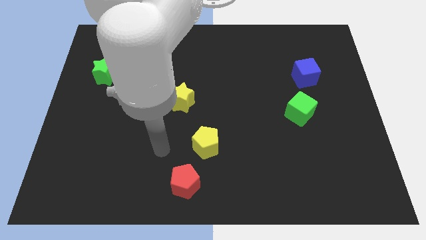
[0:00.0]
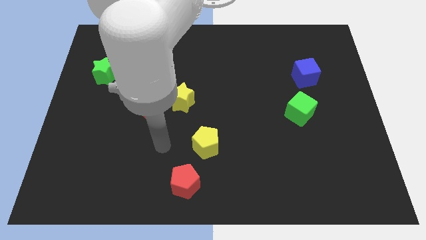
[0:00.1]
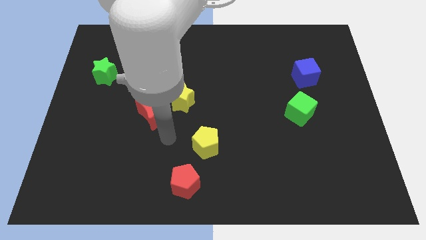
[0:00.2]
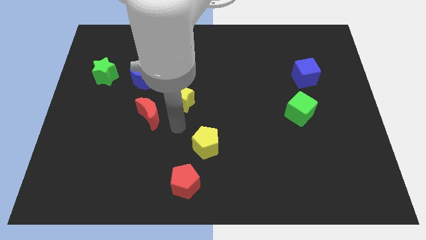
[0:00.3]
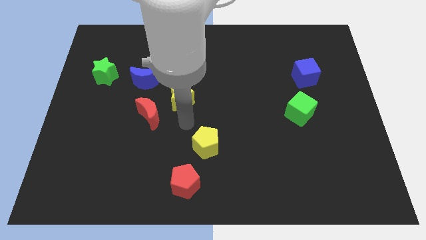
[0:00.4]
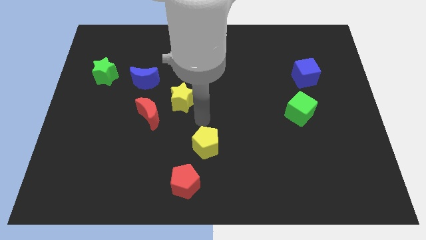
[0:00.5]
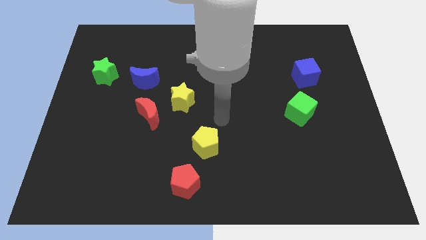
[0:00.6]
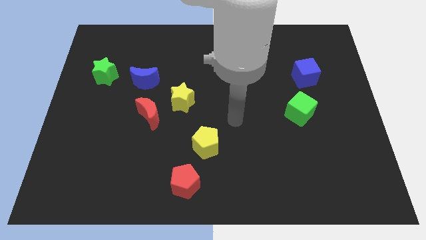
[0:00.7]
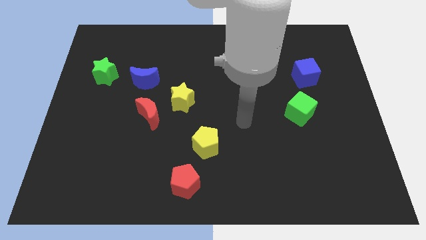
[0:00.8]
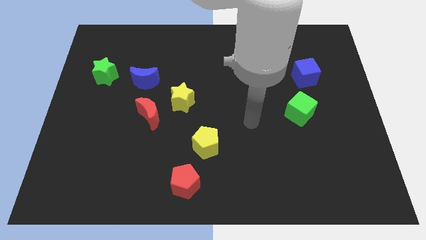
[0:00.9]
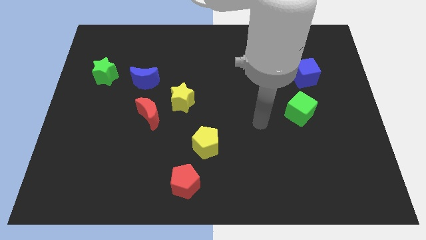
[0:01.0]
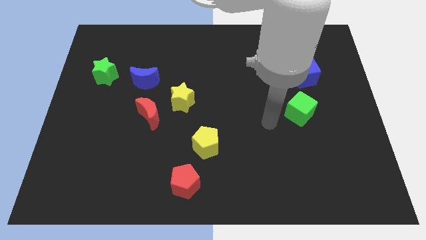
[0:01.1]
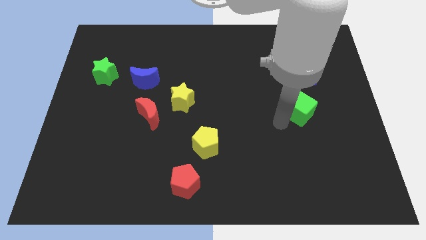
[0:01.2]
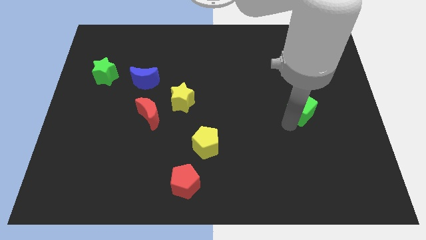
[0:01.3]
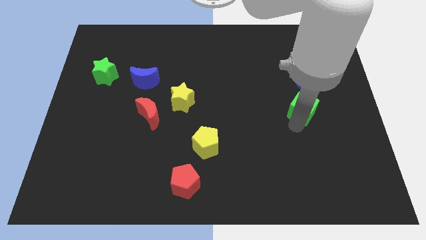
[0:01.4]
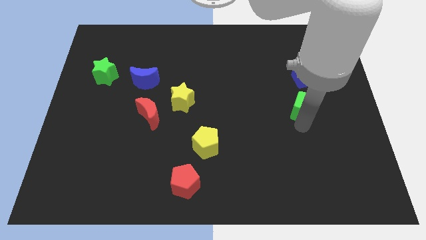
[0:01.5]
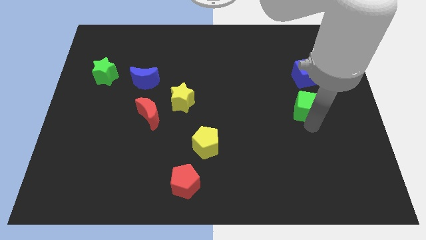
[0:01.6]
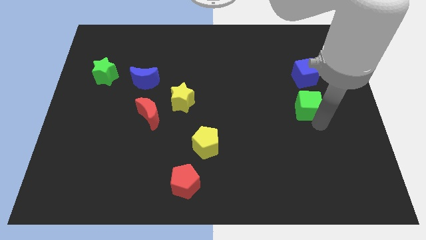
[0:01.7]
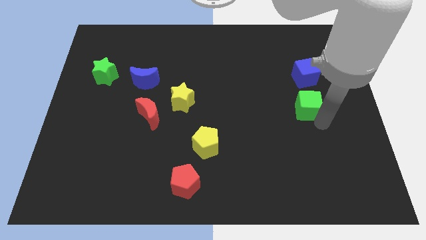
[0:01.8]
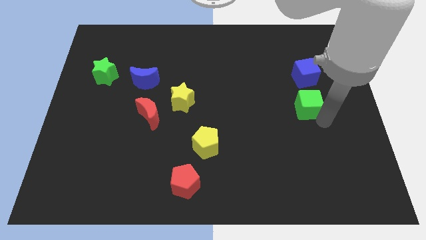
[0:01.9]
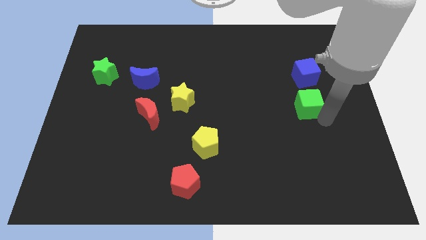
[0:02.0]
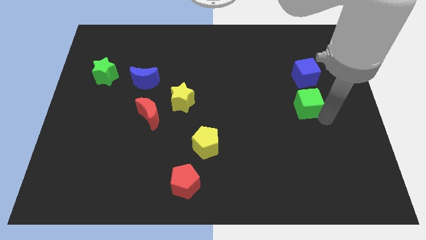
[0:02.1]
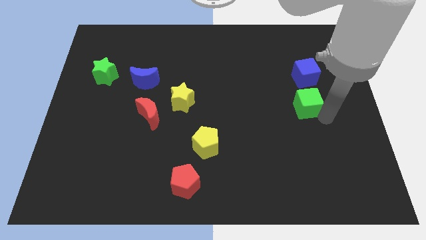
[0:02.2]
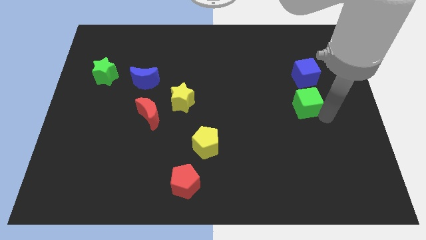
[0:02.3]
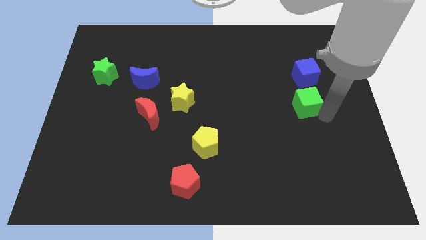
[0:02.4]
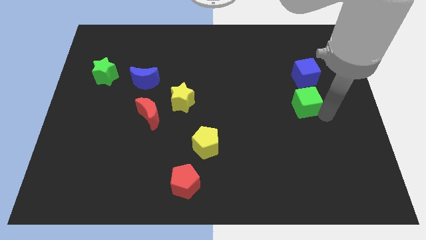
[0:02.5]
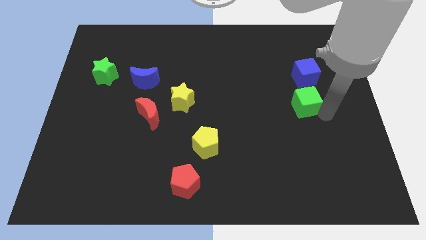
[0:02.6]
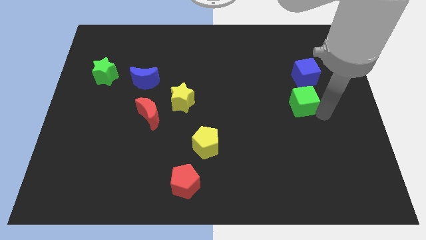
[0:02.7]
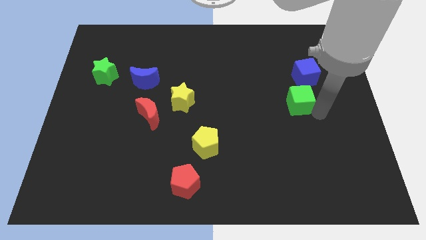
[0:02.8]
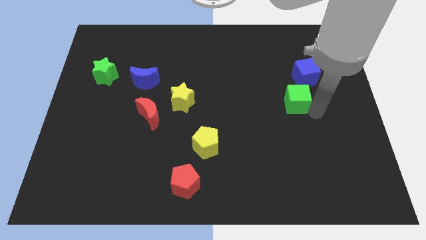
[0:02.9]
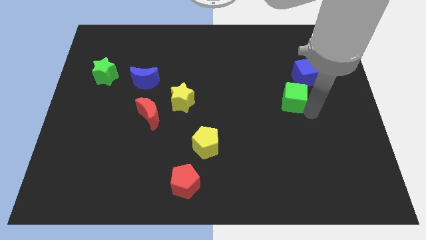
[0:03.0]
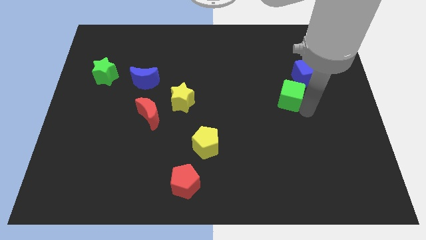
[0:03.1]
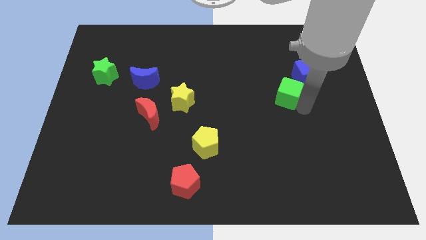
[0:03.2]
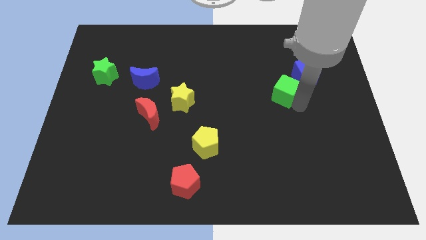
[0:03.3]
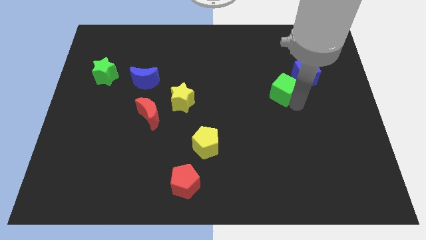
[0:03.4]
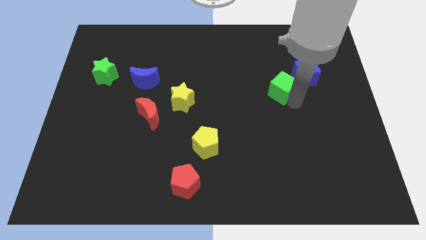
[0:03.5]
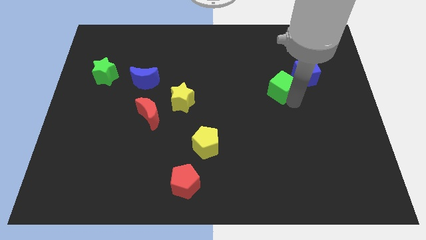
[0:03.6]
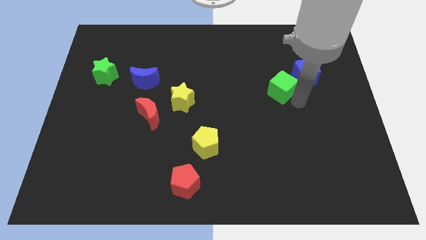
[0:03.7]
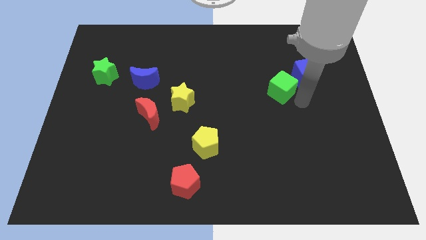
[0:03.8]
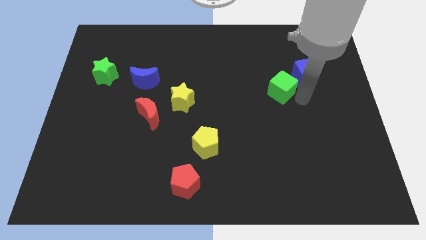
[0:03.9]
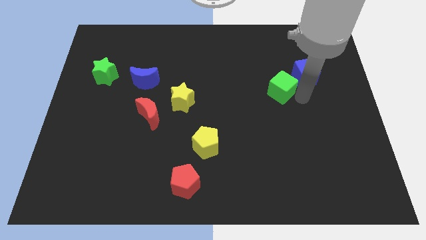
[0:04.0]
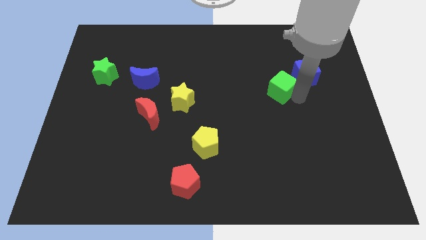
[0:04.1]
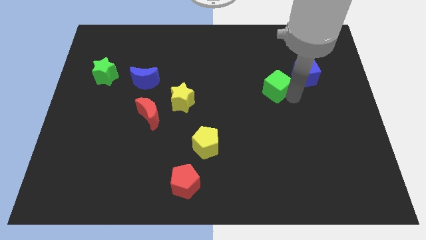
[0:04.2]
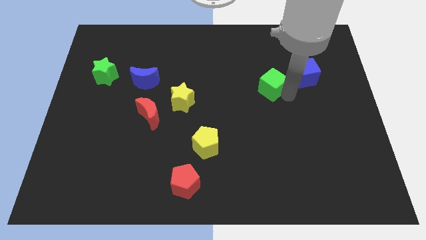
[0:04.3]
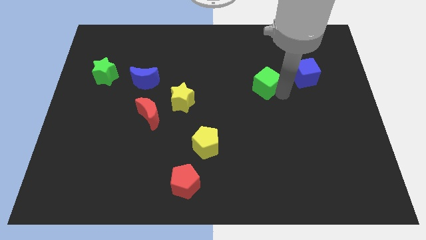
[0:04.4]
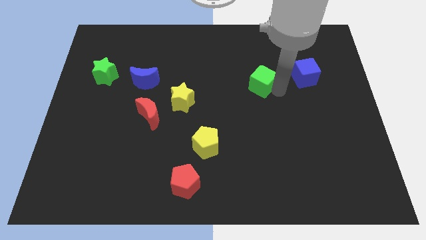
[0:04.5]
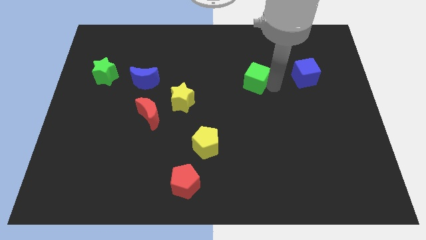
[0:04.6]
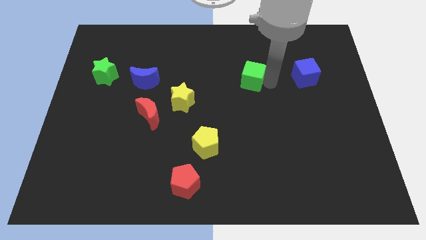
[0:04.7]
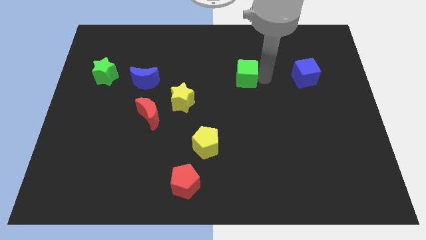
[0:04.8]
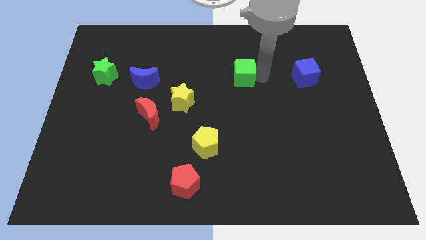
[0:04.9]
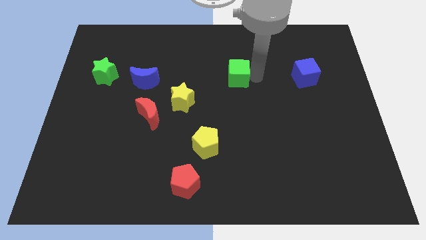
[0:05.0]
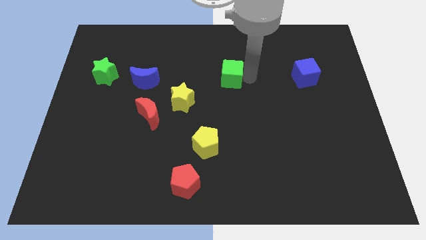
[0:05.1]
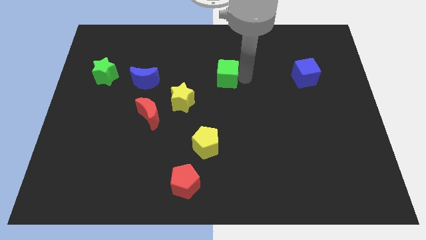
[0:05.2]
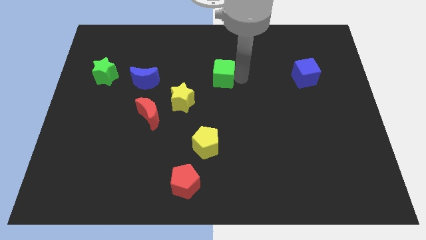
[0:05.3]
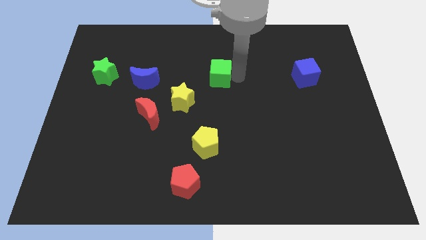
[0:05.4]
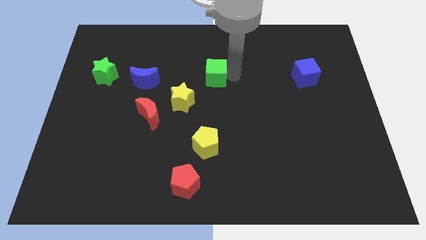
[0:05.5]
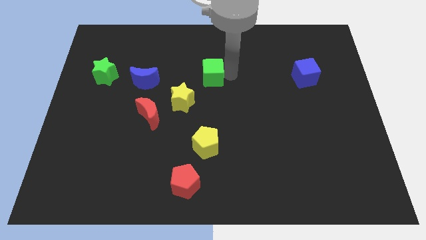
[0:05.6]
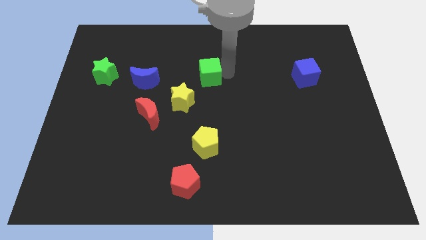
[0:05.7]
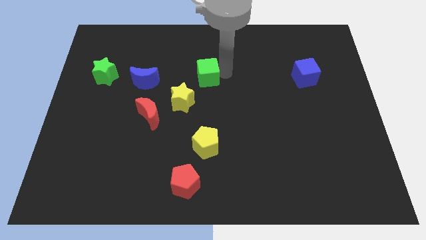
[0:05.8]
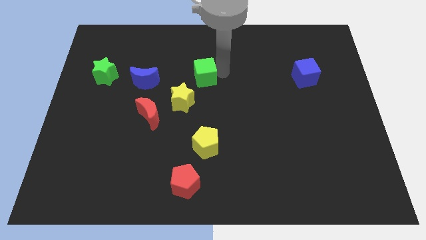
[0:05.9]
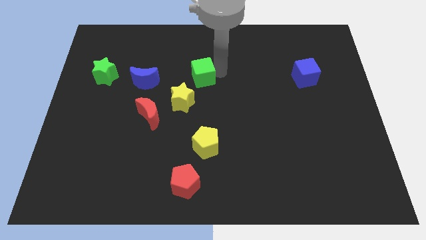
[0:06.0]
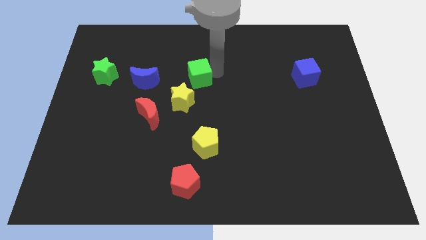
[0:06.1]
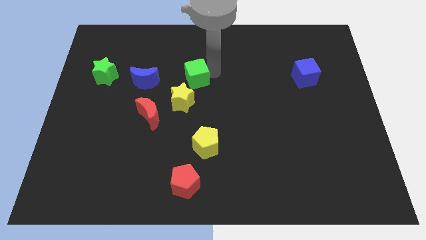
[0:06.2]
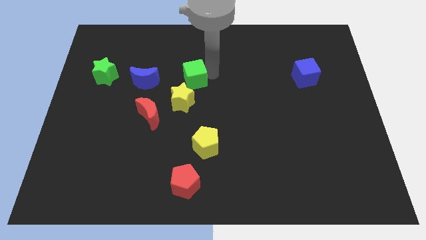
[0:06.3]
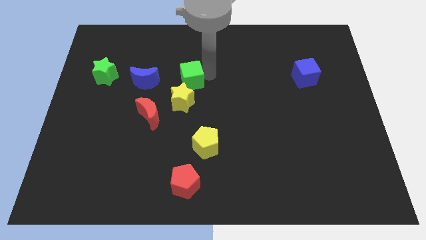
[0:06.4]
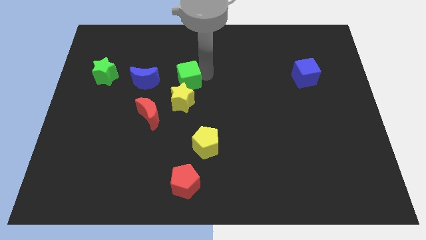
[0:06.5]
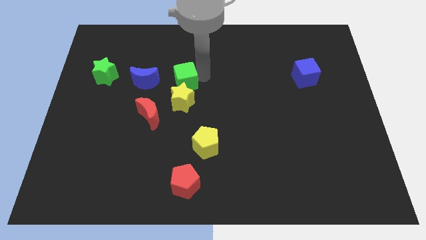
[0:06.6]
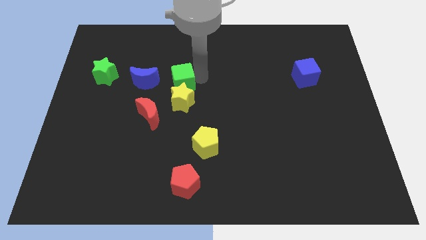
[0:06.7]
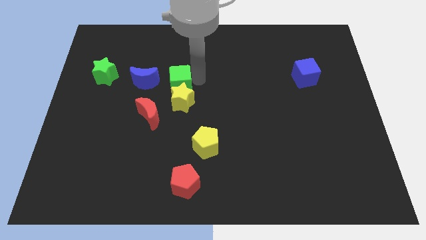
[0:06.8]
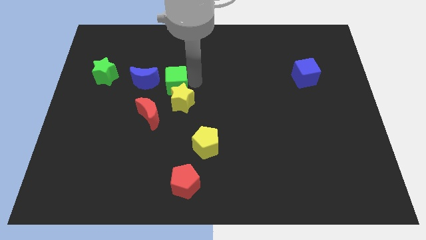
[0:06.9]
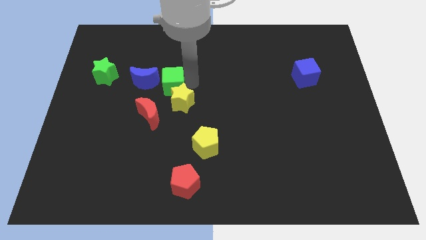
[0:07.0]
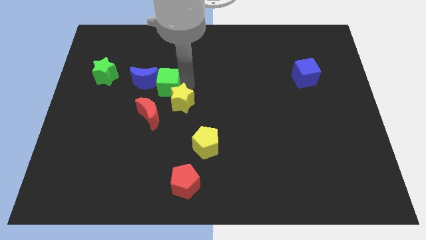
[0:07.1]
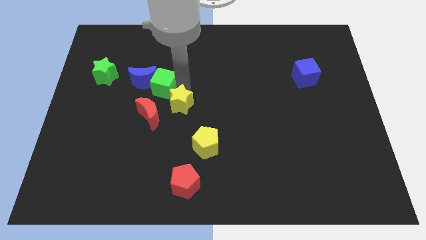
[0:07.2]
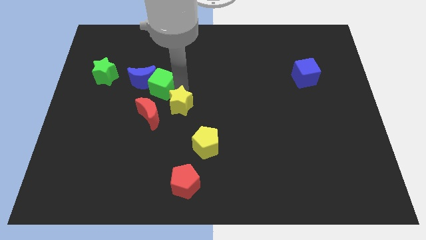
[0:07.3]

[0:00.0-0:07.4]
move the green cube close to the blue moon

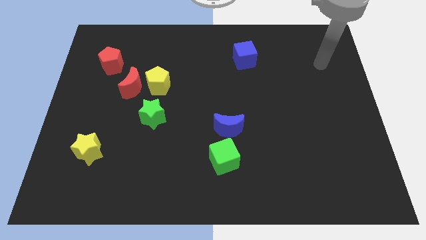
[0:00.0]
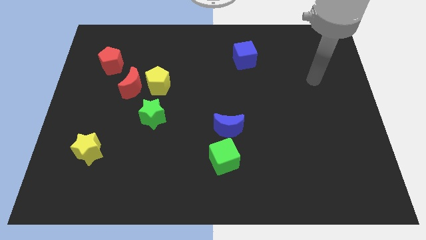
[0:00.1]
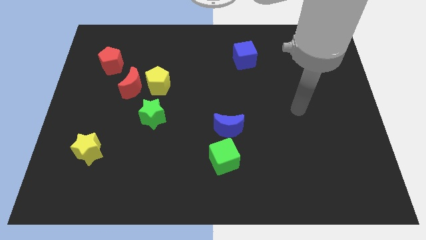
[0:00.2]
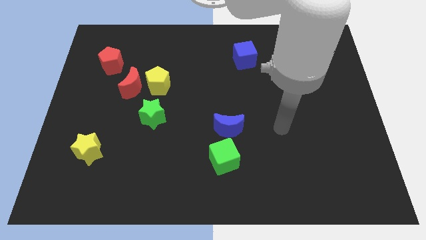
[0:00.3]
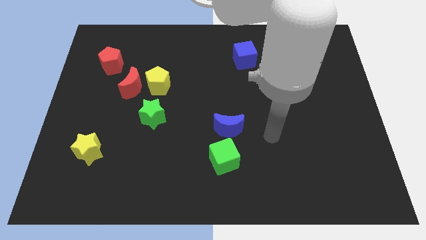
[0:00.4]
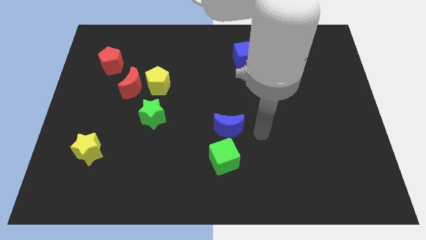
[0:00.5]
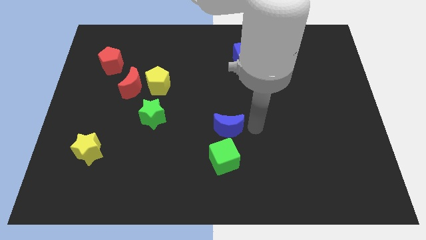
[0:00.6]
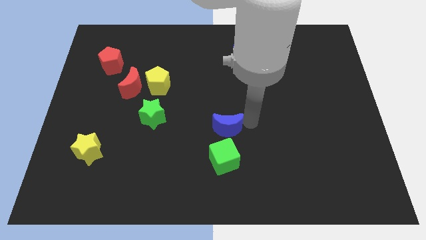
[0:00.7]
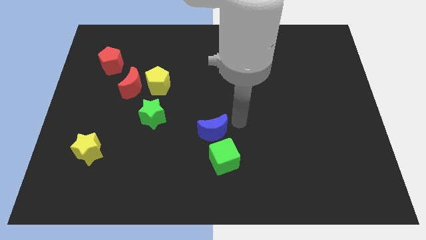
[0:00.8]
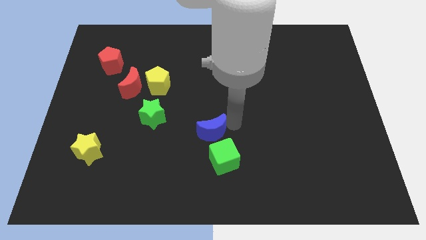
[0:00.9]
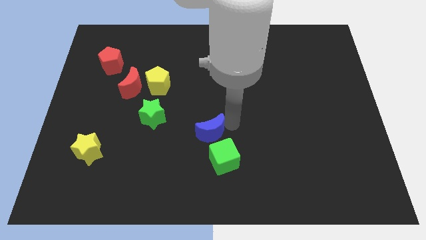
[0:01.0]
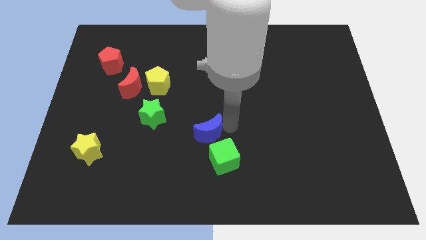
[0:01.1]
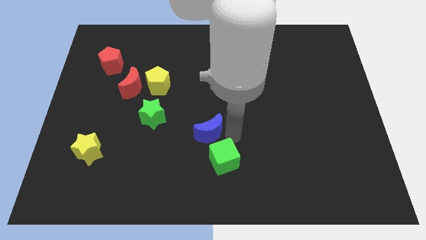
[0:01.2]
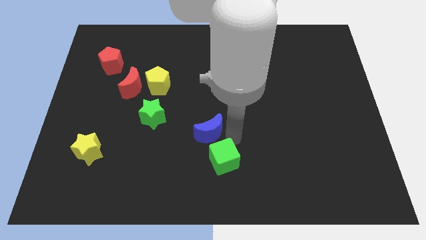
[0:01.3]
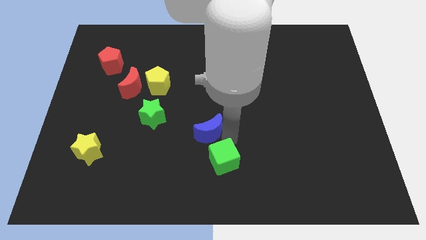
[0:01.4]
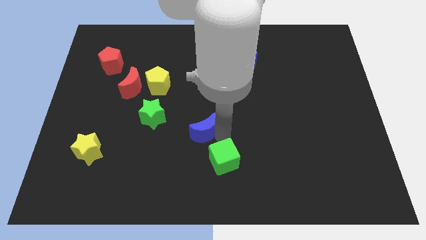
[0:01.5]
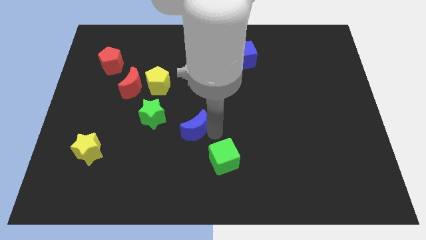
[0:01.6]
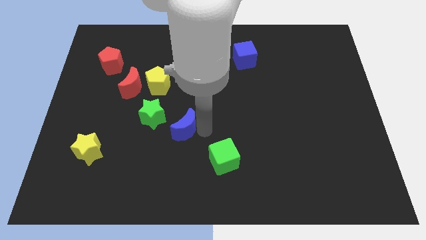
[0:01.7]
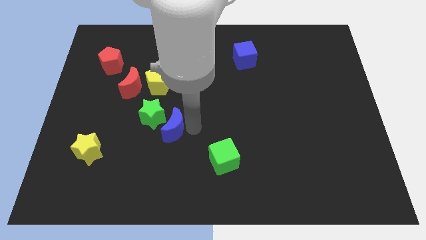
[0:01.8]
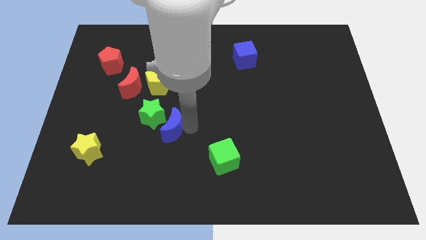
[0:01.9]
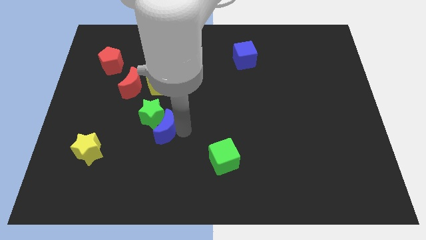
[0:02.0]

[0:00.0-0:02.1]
slide the blue moon to the green star
